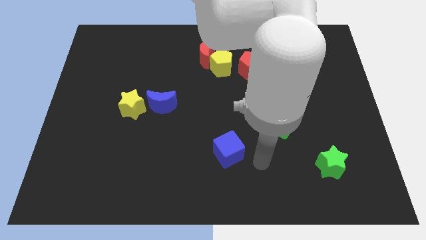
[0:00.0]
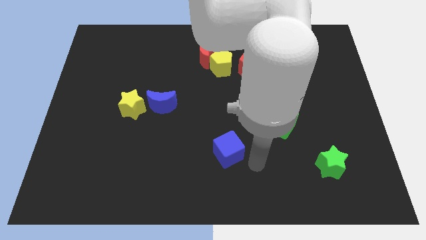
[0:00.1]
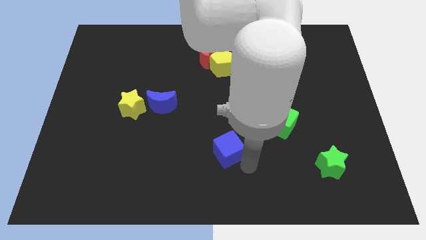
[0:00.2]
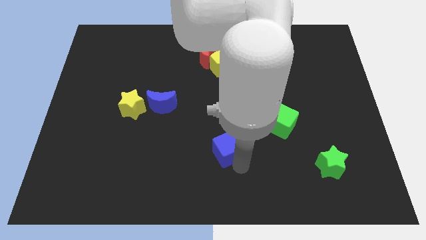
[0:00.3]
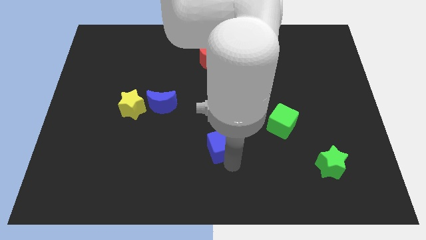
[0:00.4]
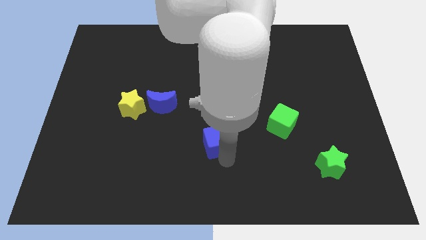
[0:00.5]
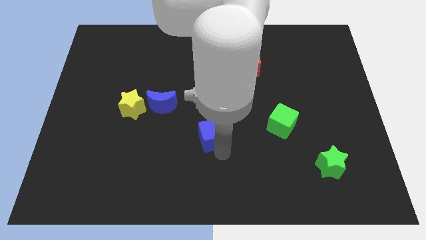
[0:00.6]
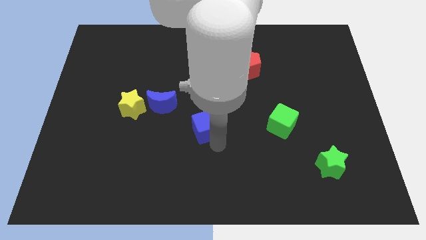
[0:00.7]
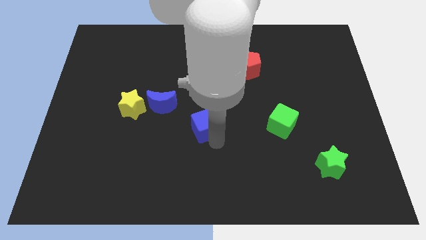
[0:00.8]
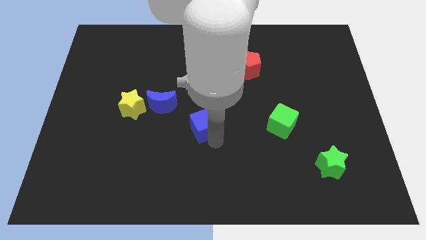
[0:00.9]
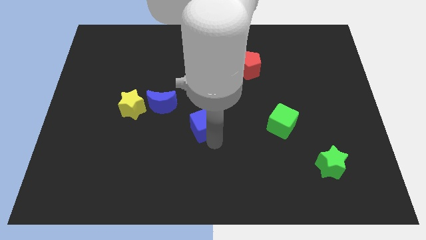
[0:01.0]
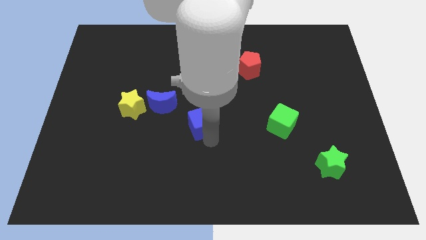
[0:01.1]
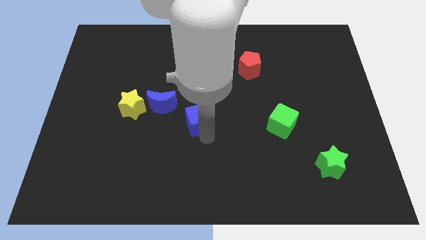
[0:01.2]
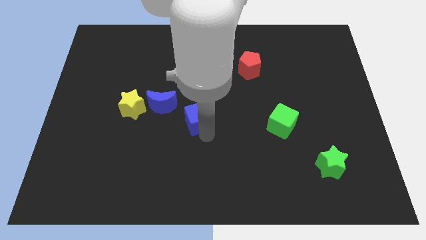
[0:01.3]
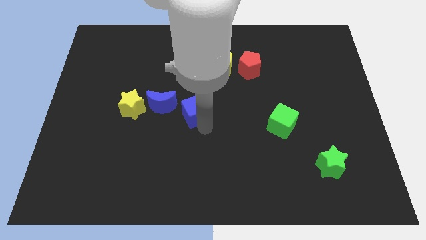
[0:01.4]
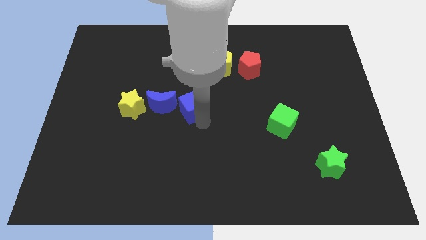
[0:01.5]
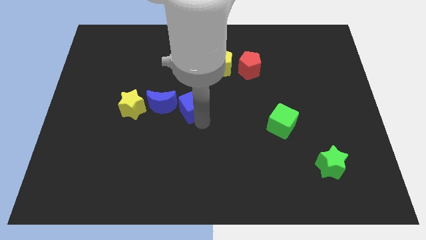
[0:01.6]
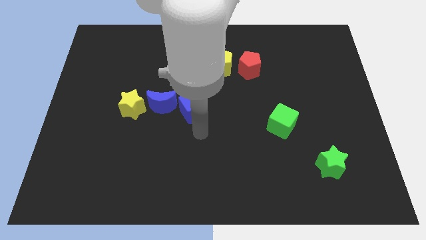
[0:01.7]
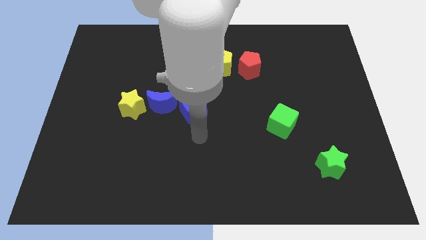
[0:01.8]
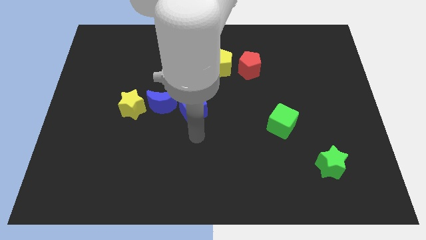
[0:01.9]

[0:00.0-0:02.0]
move the blue cube toward the blue crescent

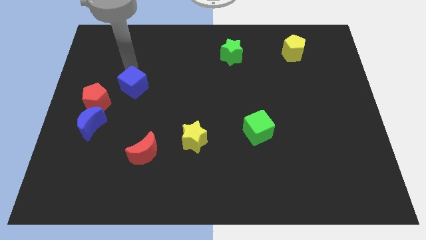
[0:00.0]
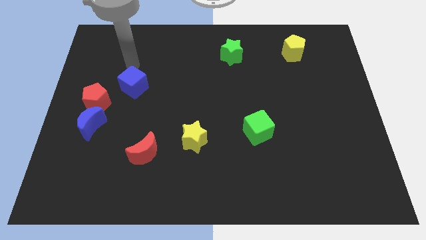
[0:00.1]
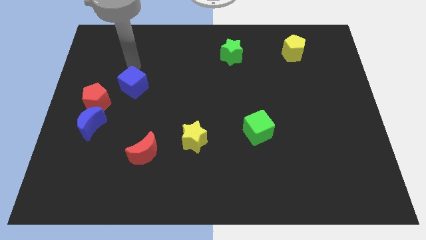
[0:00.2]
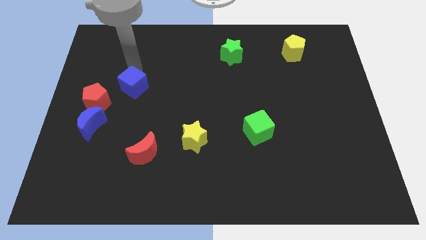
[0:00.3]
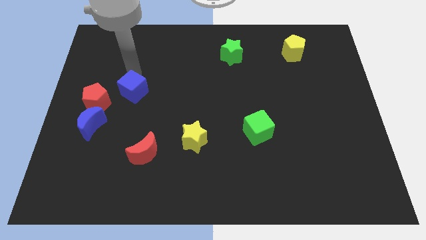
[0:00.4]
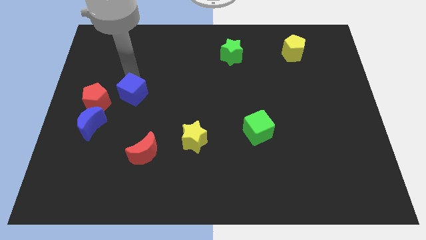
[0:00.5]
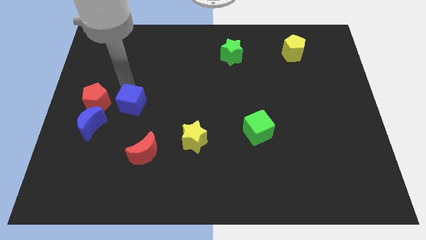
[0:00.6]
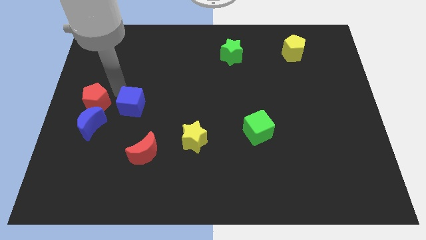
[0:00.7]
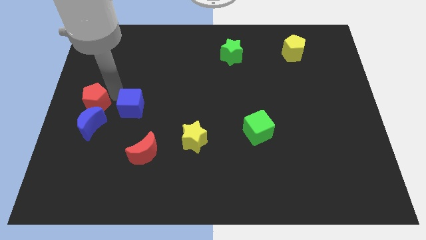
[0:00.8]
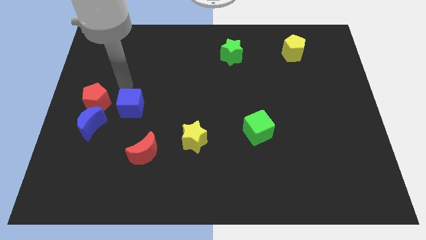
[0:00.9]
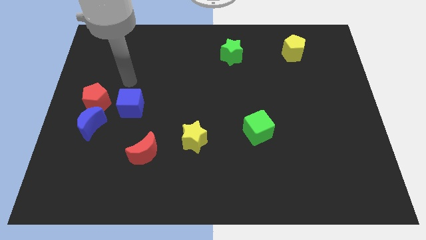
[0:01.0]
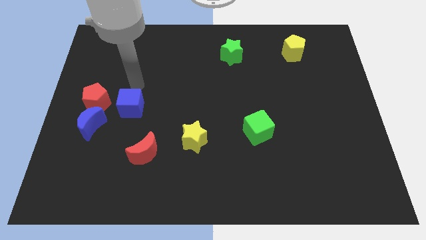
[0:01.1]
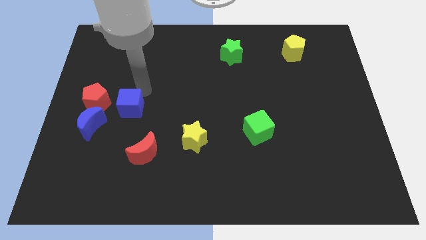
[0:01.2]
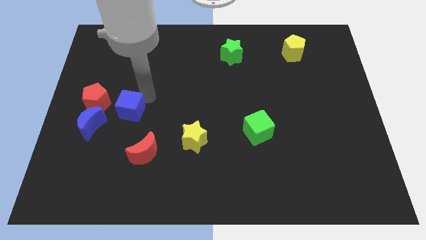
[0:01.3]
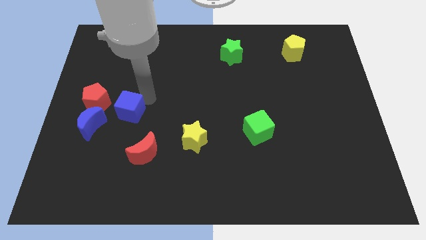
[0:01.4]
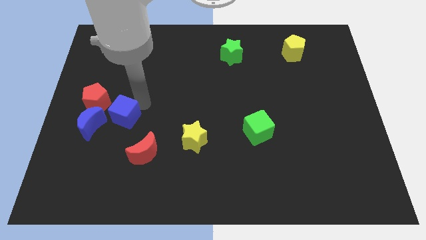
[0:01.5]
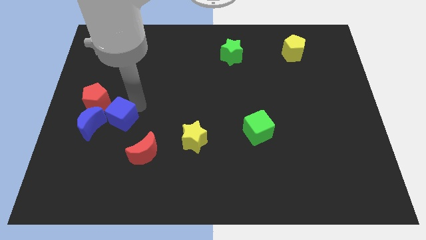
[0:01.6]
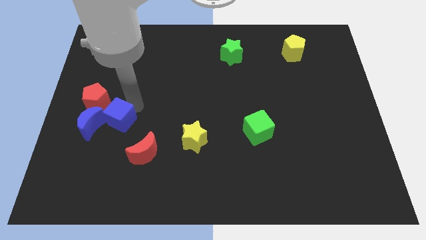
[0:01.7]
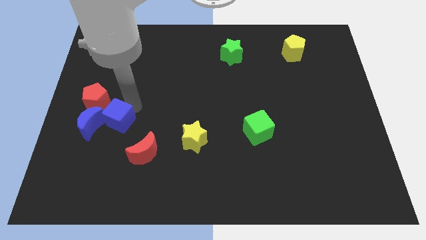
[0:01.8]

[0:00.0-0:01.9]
slide the blue cube into the right side of the blue moon

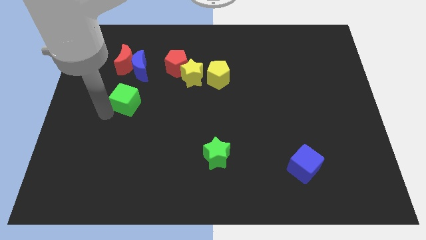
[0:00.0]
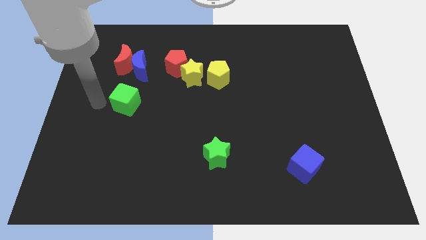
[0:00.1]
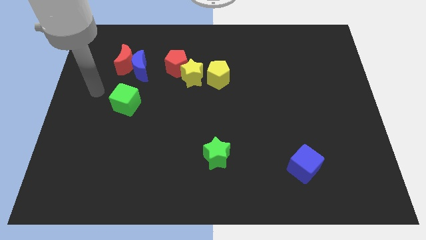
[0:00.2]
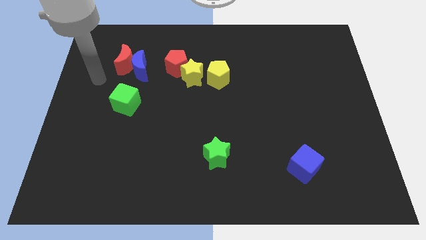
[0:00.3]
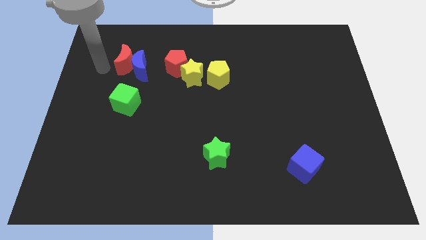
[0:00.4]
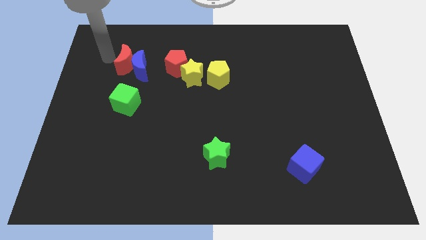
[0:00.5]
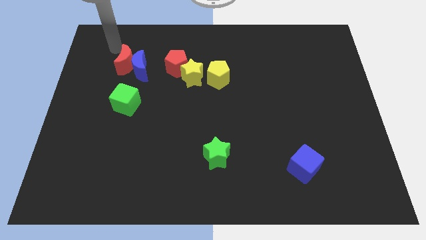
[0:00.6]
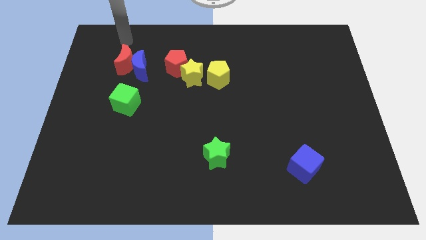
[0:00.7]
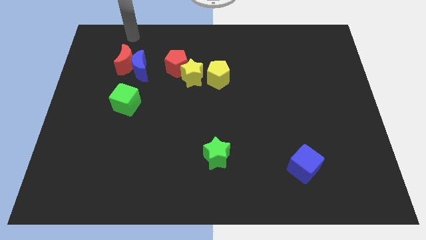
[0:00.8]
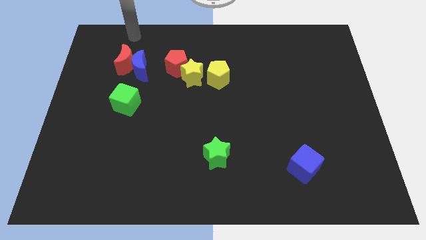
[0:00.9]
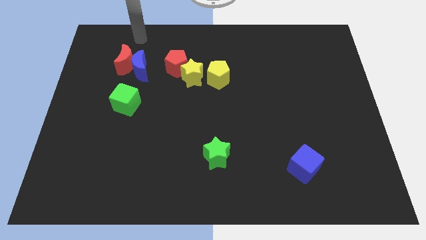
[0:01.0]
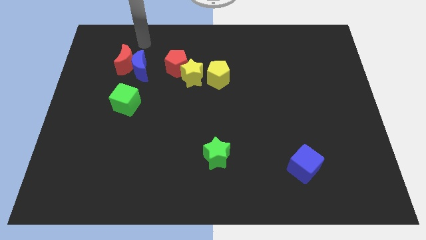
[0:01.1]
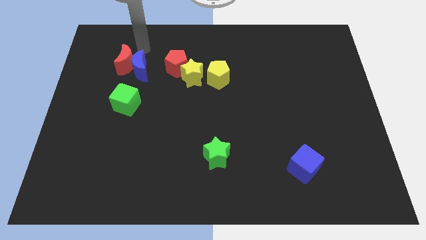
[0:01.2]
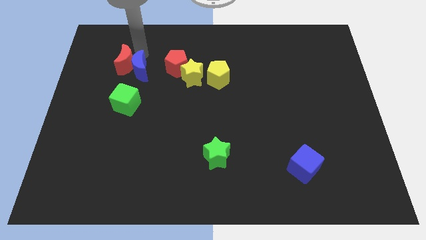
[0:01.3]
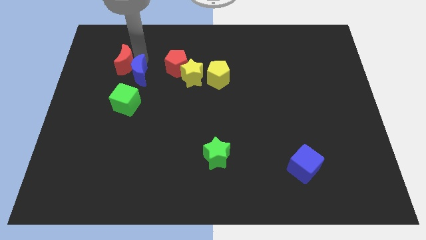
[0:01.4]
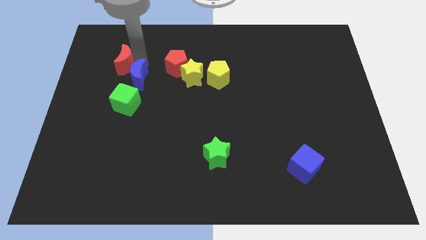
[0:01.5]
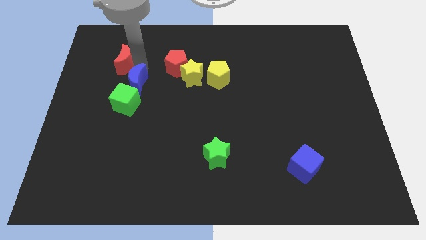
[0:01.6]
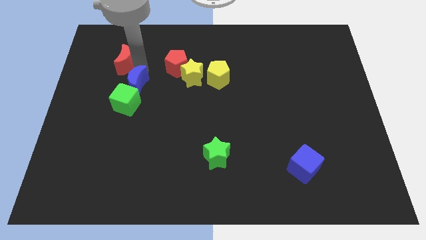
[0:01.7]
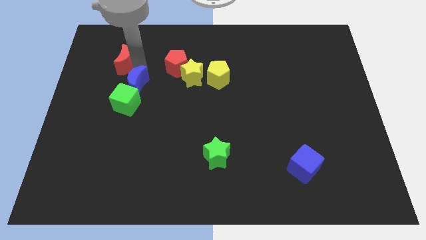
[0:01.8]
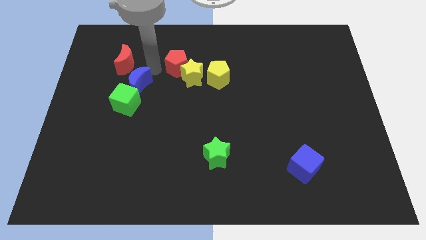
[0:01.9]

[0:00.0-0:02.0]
place the blue moon to the top of the green cube

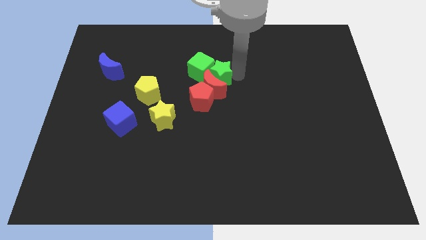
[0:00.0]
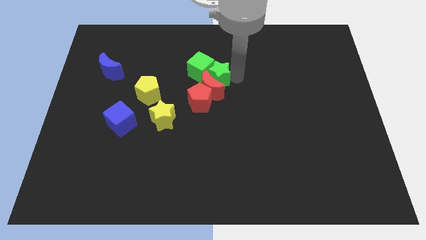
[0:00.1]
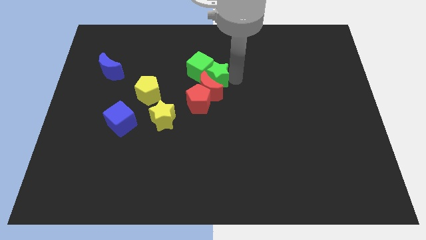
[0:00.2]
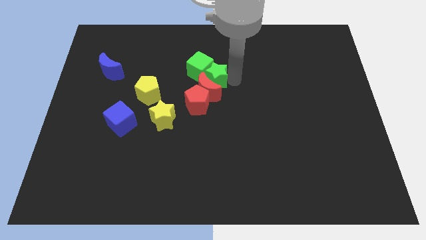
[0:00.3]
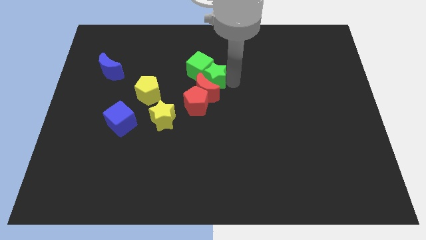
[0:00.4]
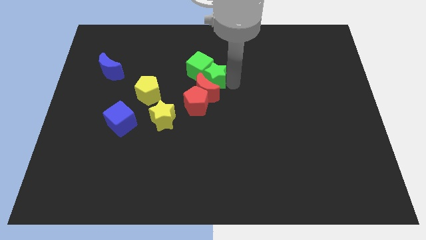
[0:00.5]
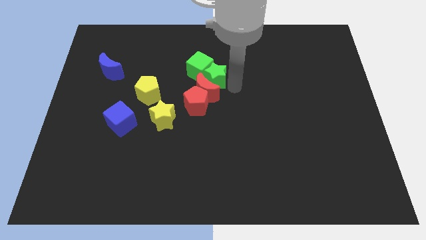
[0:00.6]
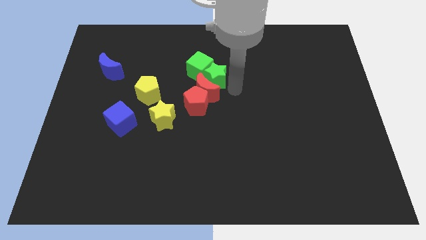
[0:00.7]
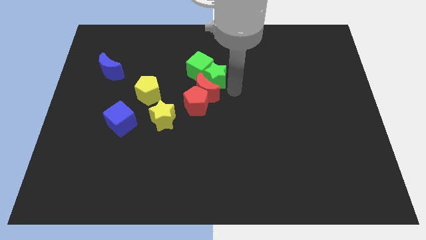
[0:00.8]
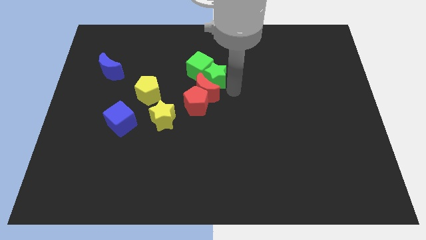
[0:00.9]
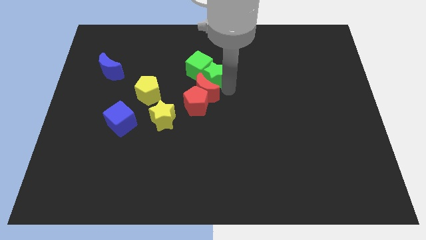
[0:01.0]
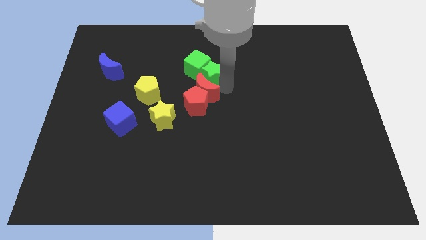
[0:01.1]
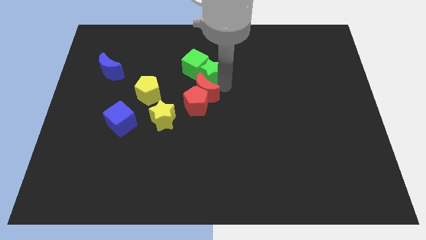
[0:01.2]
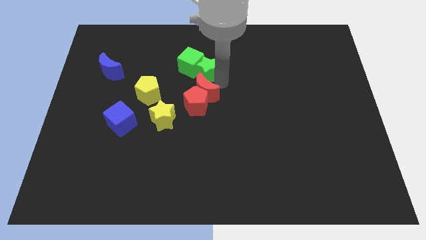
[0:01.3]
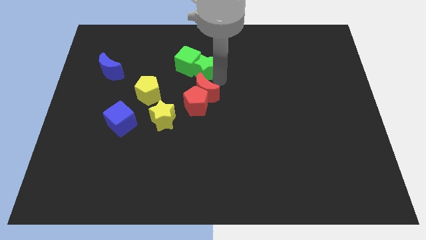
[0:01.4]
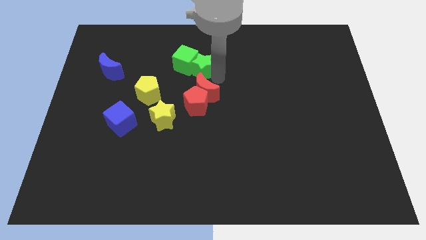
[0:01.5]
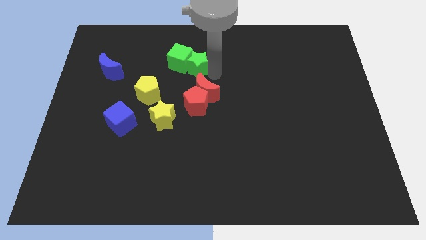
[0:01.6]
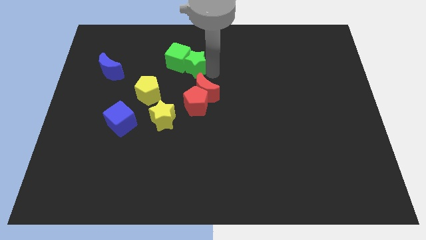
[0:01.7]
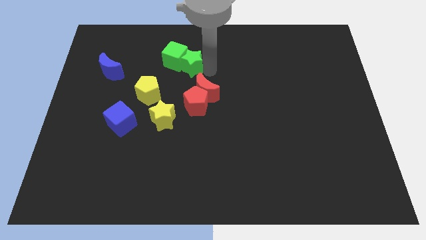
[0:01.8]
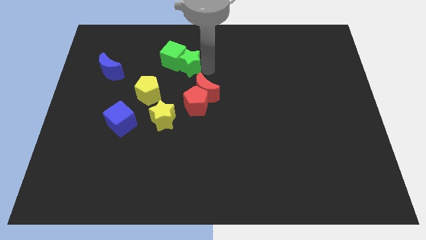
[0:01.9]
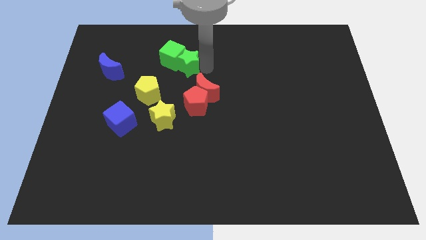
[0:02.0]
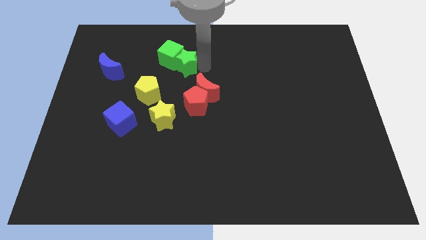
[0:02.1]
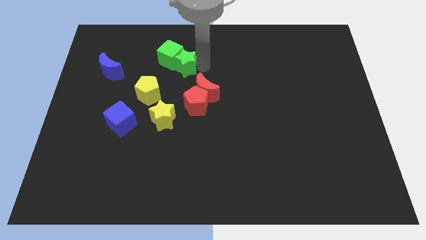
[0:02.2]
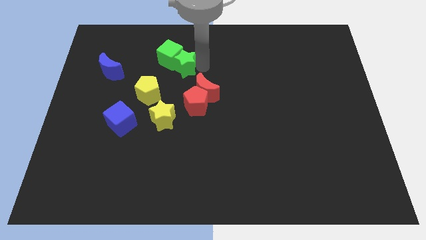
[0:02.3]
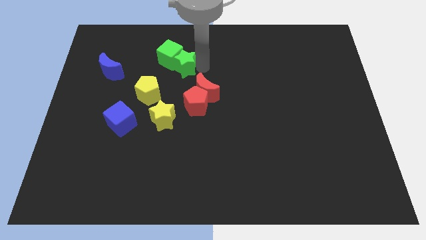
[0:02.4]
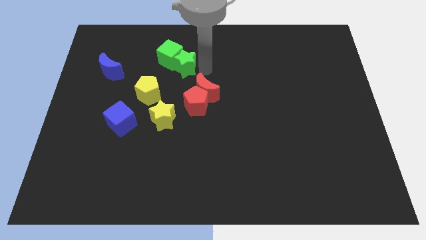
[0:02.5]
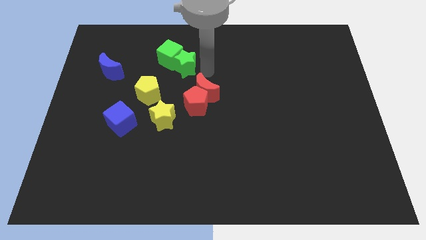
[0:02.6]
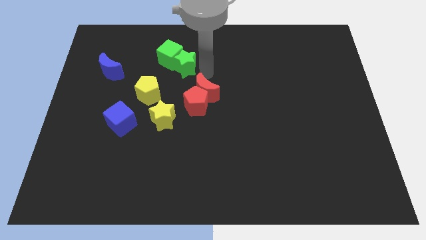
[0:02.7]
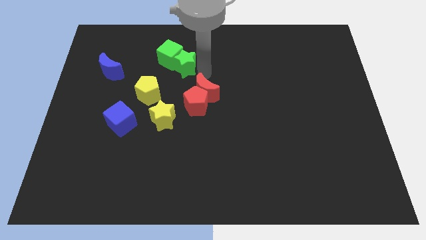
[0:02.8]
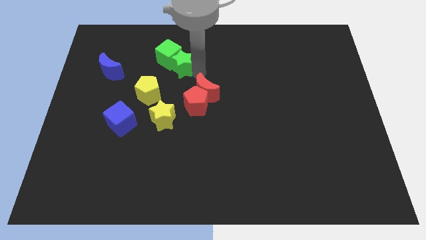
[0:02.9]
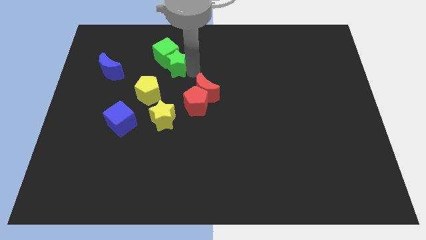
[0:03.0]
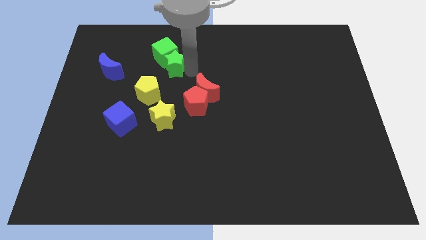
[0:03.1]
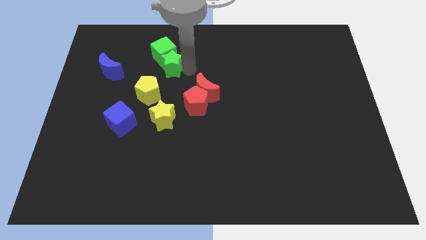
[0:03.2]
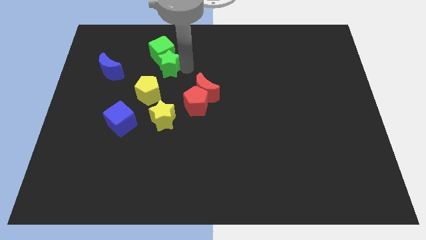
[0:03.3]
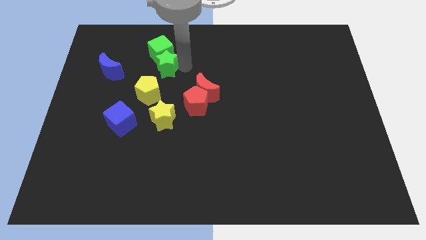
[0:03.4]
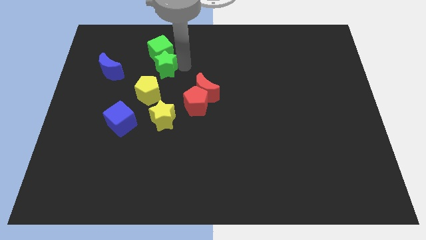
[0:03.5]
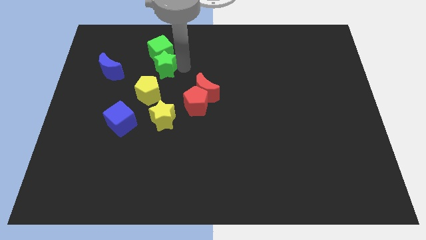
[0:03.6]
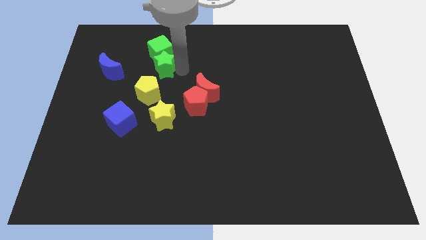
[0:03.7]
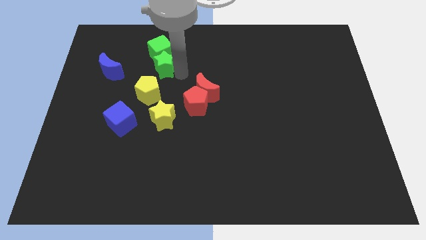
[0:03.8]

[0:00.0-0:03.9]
separate the green blocks from the red moon and the red pentagon
